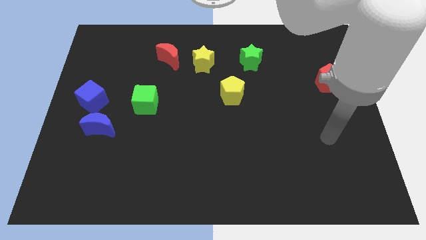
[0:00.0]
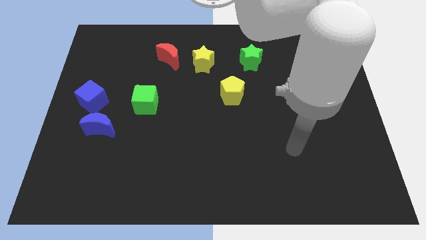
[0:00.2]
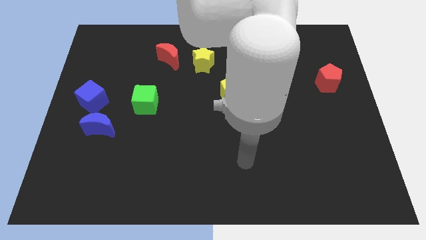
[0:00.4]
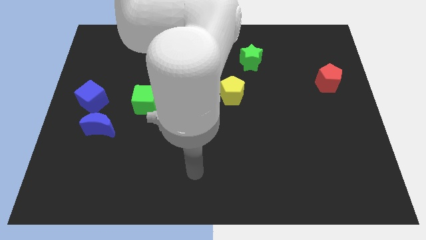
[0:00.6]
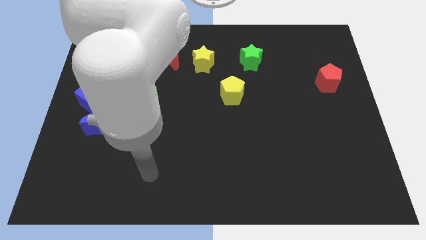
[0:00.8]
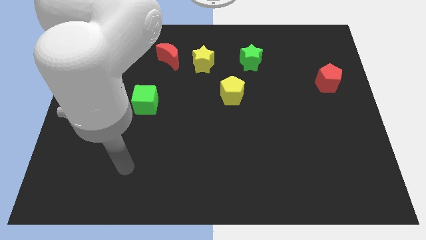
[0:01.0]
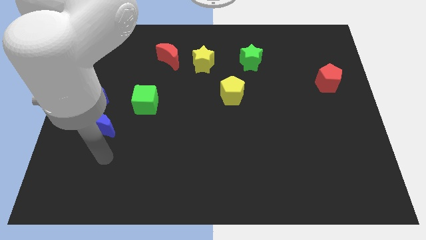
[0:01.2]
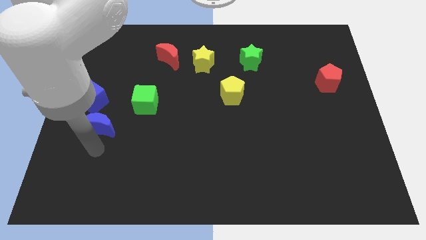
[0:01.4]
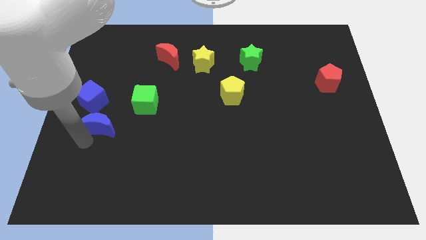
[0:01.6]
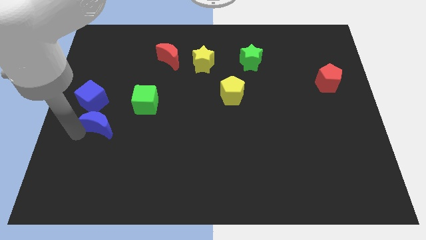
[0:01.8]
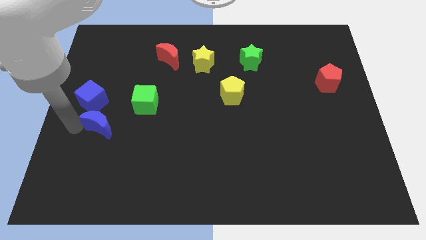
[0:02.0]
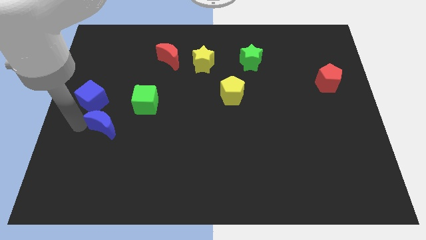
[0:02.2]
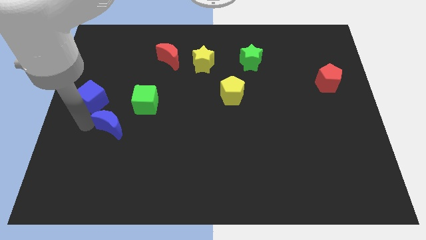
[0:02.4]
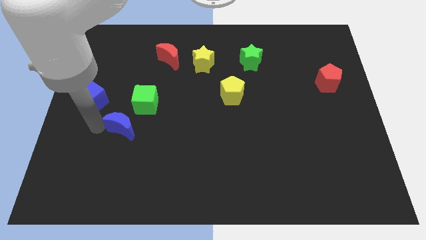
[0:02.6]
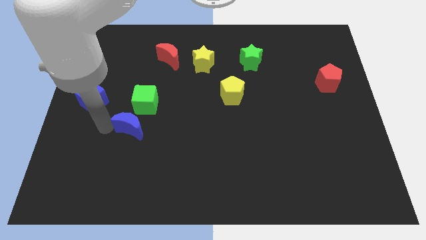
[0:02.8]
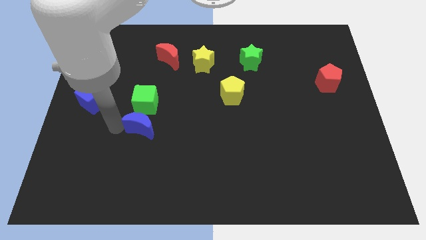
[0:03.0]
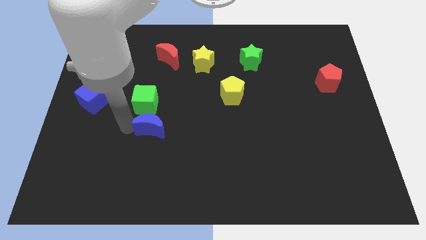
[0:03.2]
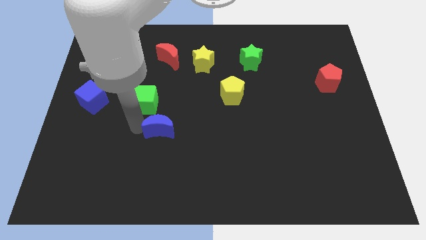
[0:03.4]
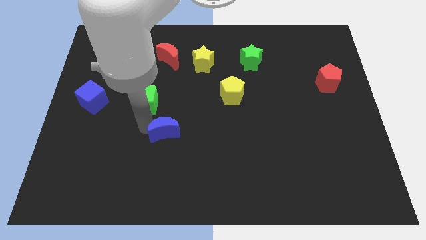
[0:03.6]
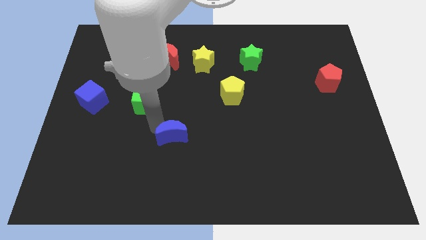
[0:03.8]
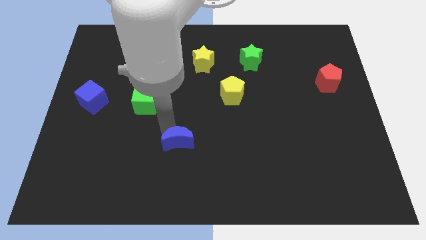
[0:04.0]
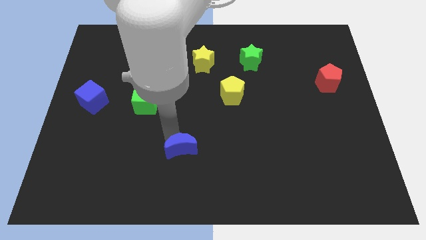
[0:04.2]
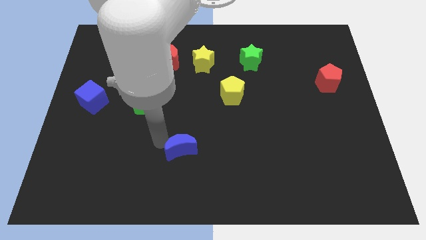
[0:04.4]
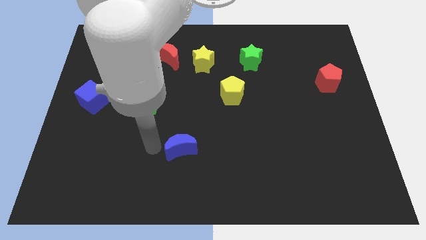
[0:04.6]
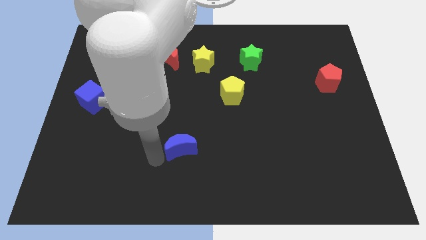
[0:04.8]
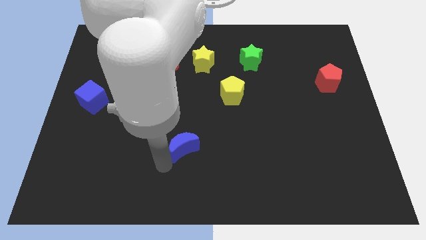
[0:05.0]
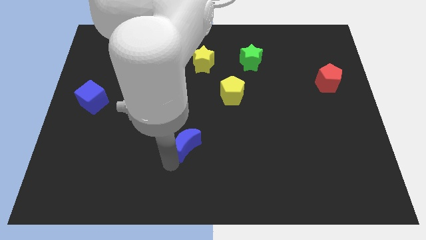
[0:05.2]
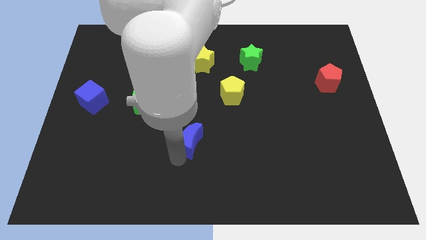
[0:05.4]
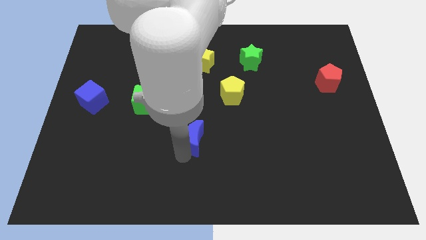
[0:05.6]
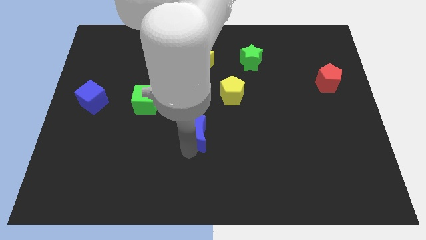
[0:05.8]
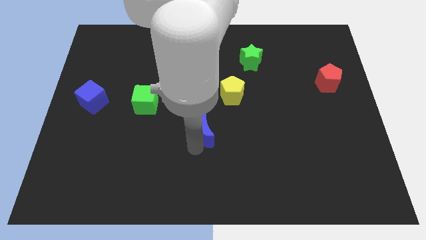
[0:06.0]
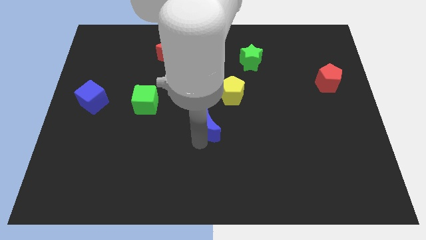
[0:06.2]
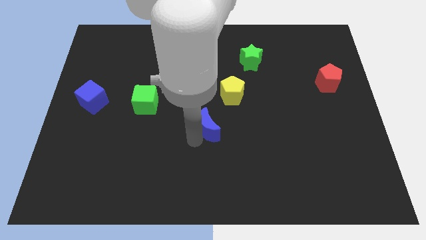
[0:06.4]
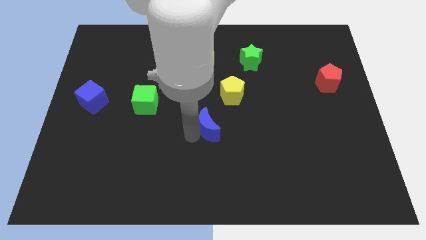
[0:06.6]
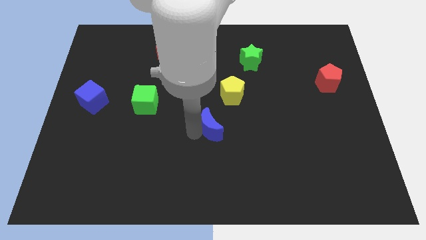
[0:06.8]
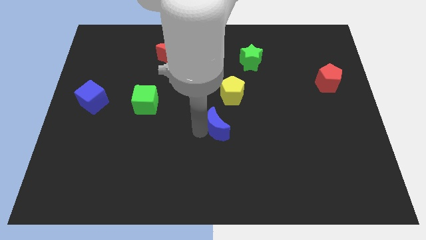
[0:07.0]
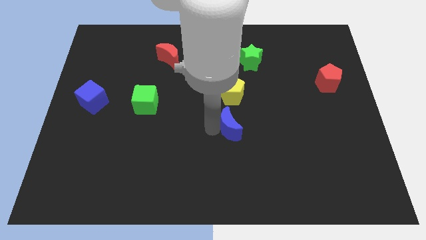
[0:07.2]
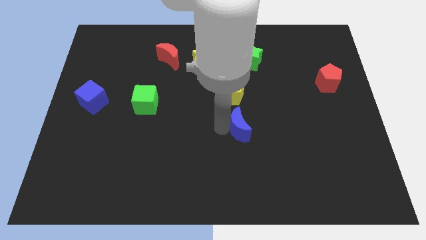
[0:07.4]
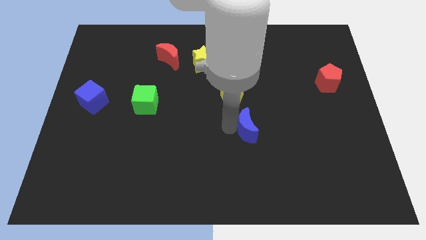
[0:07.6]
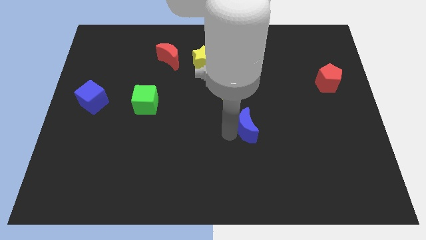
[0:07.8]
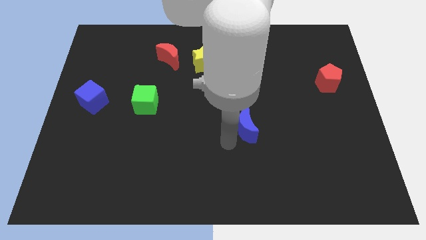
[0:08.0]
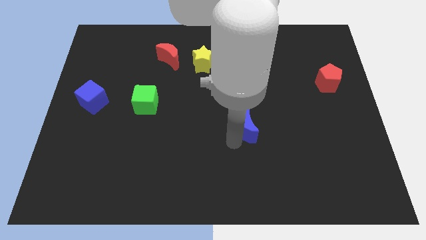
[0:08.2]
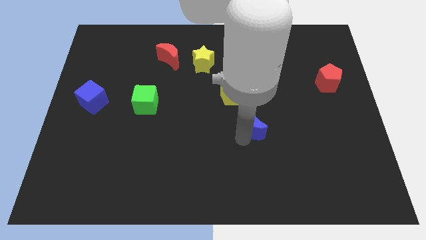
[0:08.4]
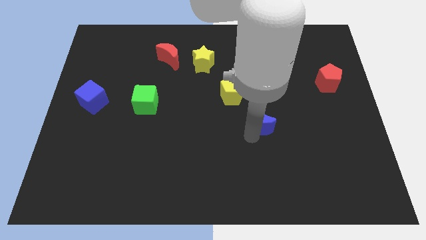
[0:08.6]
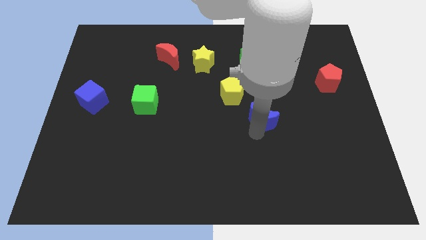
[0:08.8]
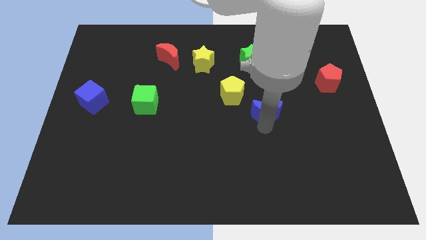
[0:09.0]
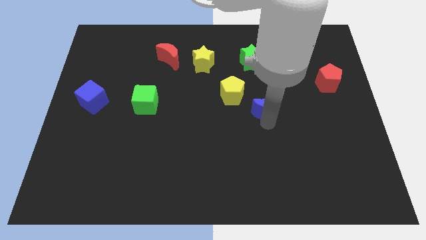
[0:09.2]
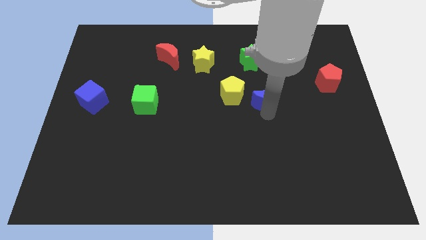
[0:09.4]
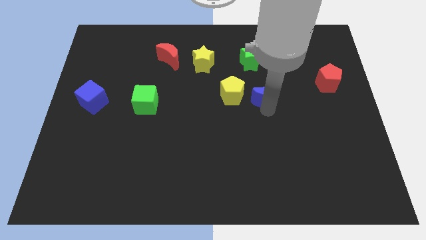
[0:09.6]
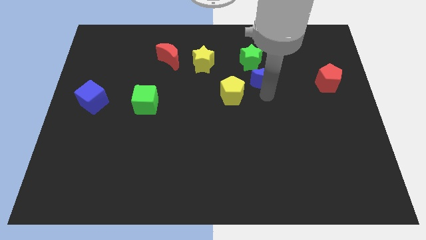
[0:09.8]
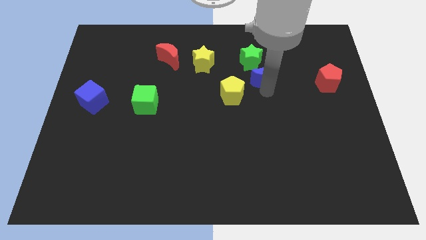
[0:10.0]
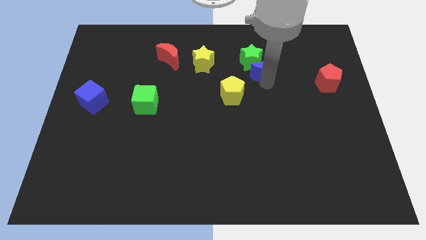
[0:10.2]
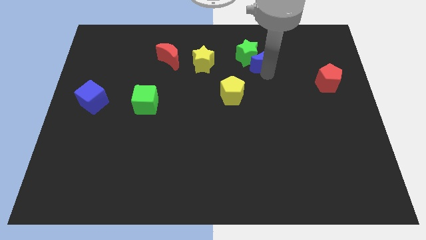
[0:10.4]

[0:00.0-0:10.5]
slide the blue moon close to the green star

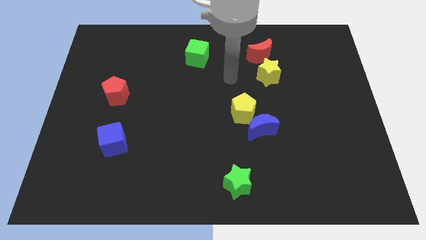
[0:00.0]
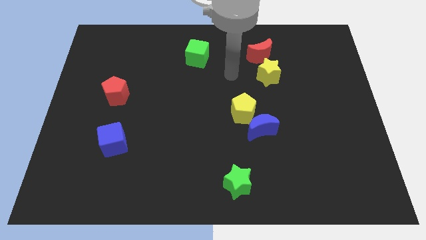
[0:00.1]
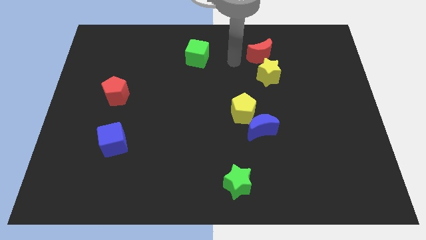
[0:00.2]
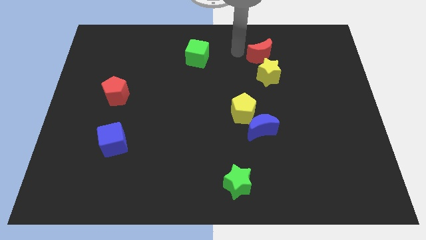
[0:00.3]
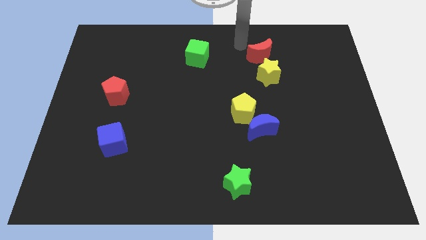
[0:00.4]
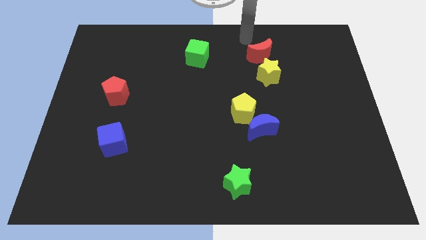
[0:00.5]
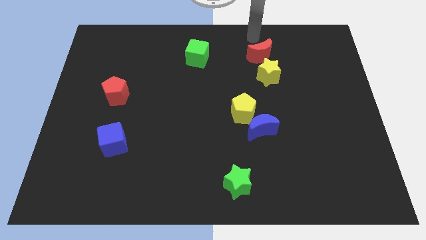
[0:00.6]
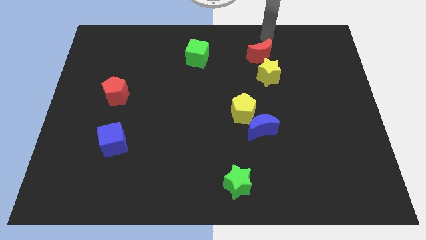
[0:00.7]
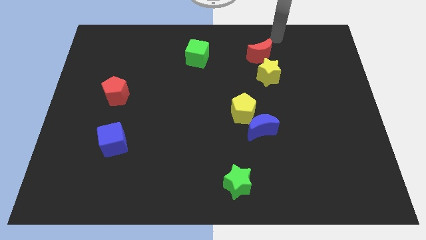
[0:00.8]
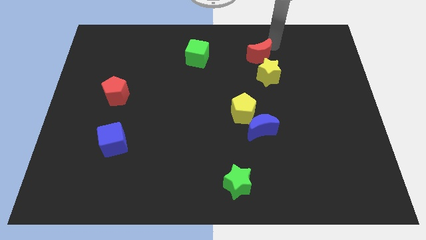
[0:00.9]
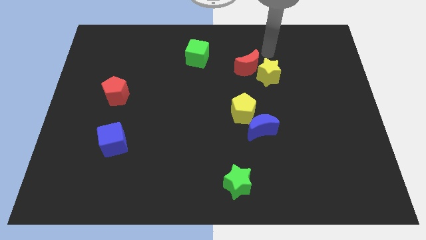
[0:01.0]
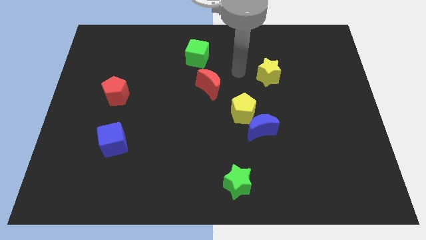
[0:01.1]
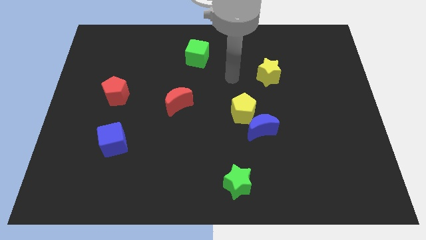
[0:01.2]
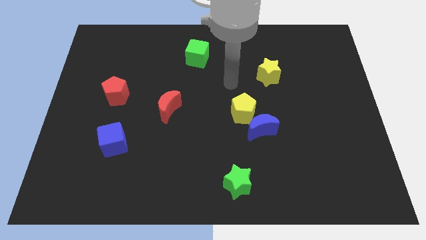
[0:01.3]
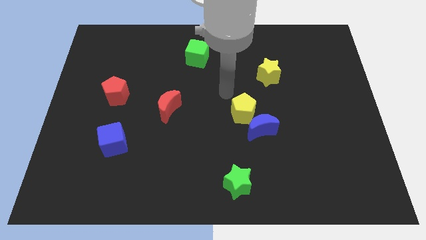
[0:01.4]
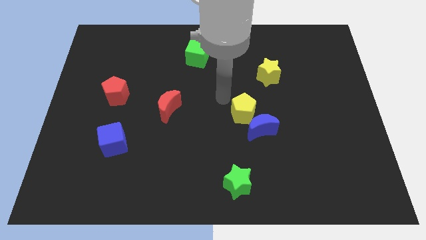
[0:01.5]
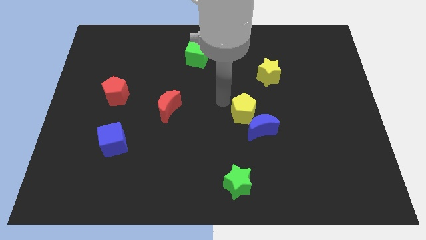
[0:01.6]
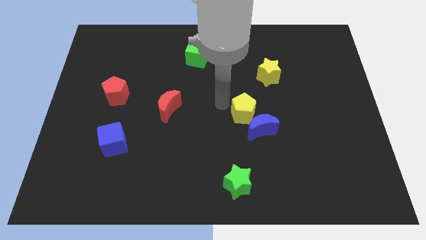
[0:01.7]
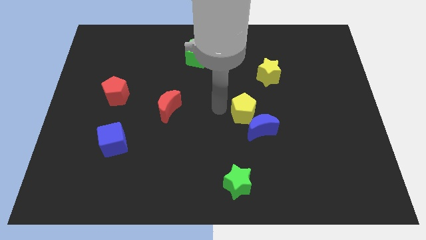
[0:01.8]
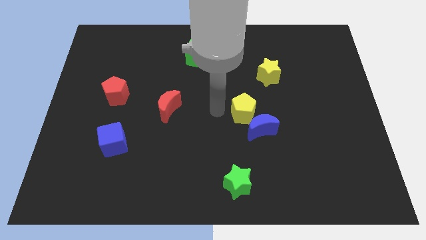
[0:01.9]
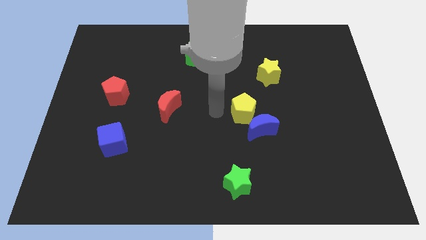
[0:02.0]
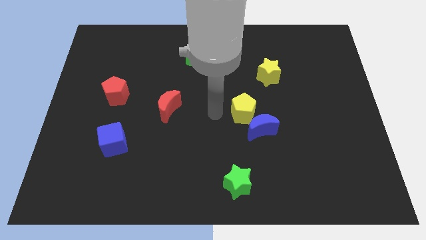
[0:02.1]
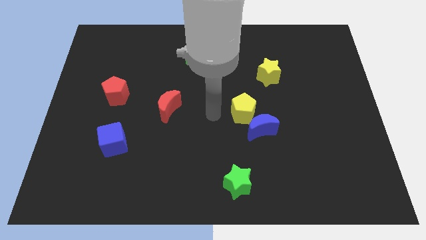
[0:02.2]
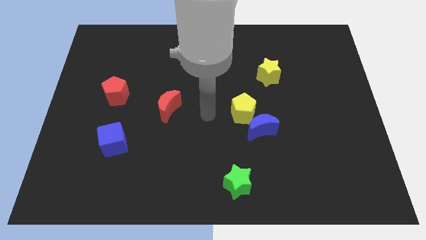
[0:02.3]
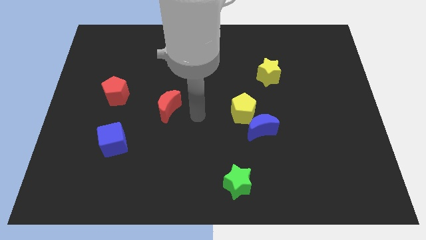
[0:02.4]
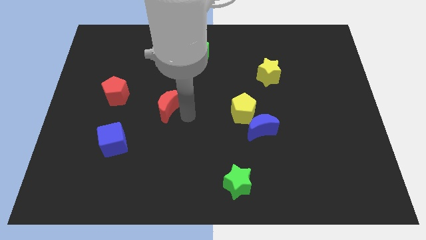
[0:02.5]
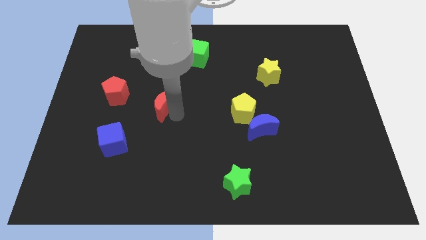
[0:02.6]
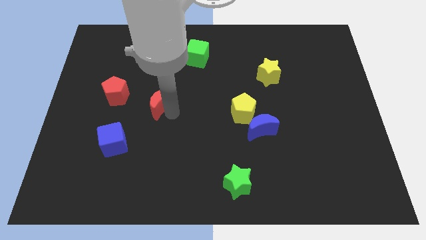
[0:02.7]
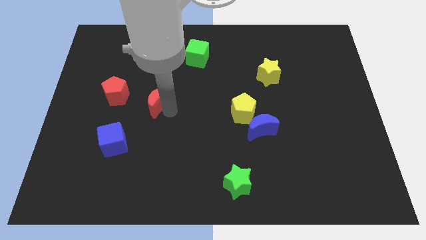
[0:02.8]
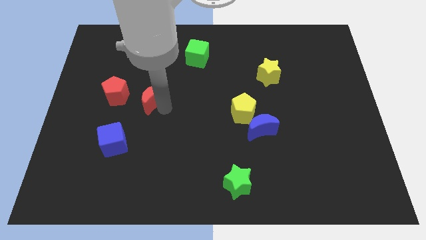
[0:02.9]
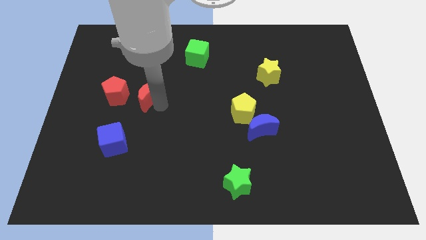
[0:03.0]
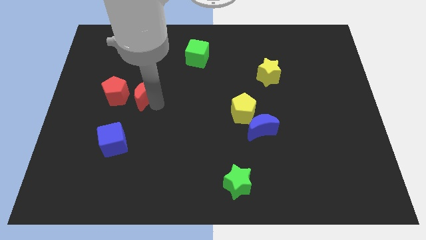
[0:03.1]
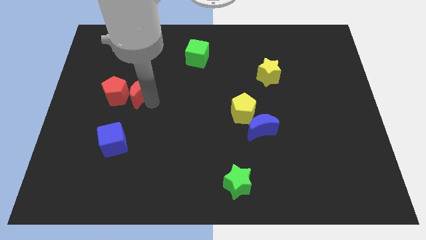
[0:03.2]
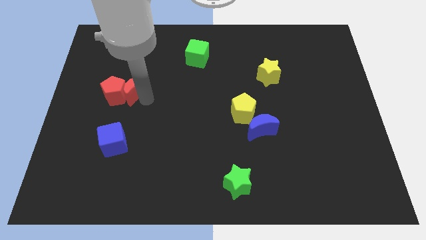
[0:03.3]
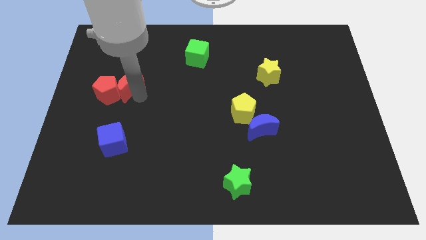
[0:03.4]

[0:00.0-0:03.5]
move the red moon towards the red pentagon
